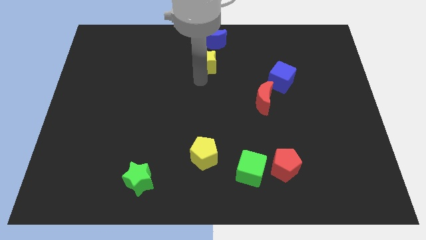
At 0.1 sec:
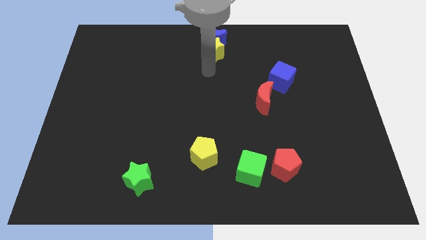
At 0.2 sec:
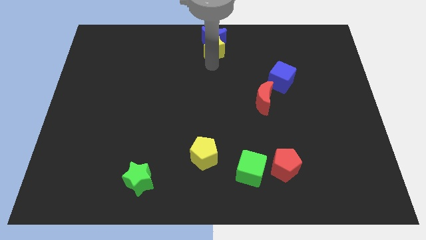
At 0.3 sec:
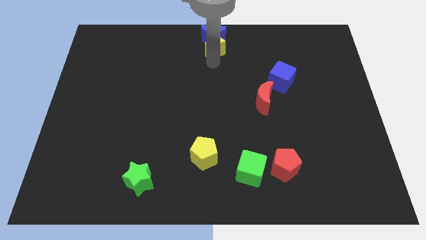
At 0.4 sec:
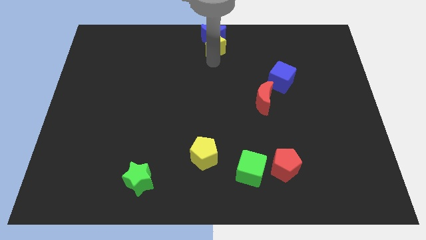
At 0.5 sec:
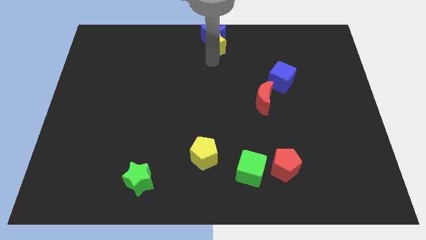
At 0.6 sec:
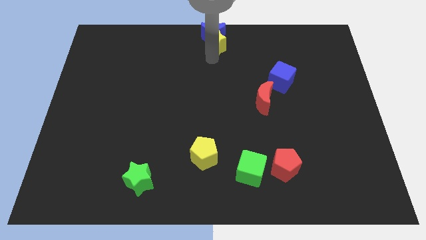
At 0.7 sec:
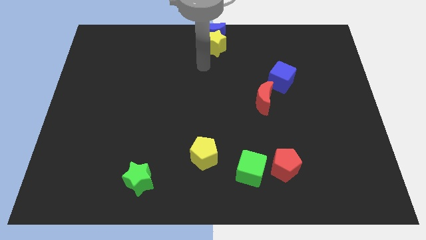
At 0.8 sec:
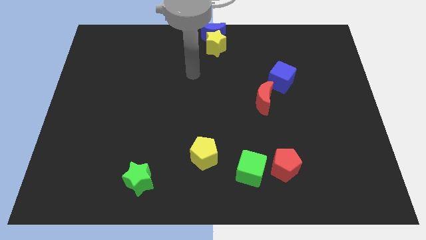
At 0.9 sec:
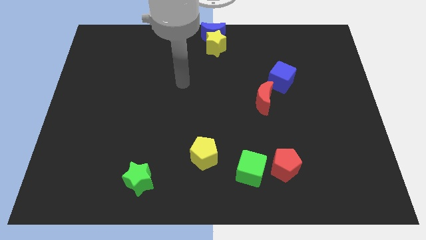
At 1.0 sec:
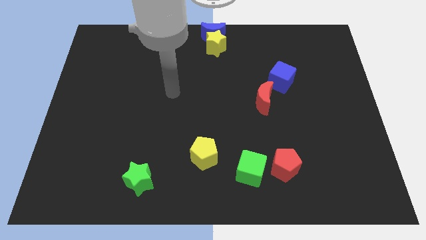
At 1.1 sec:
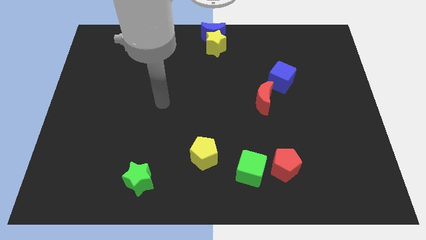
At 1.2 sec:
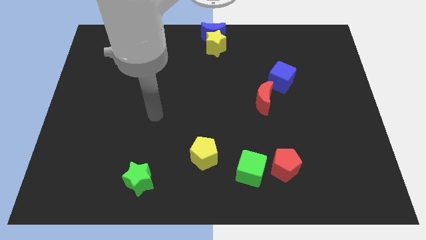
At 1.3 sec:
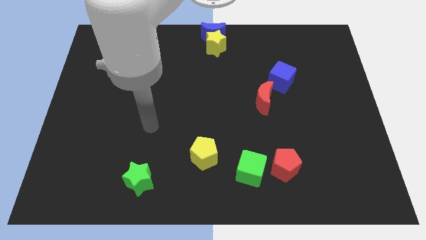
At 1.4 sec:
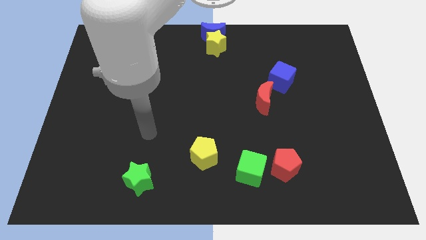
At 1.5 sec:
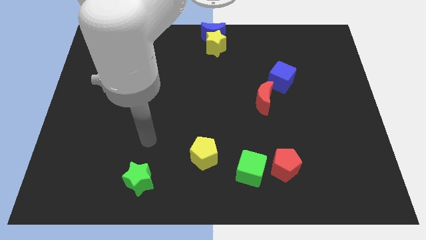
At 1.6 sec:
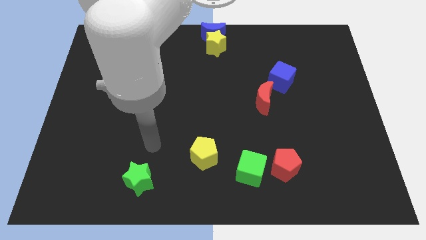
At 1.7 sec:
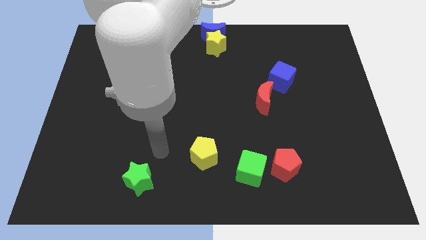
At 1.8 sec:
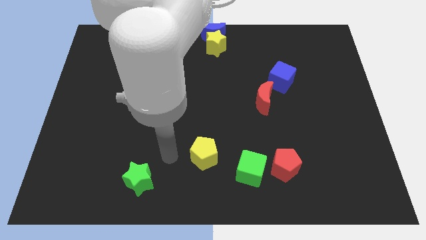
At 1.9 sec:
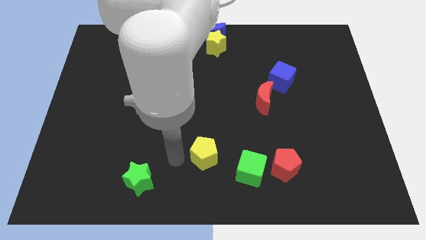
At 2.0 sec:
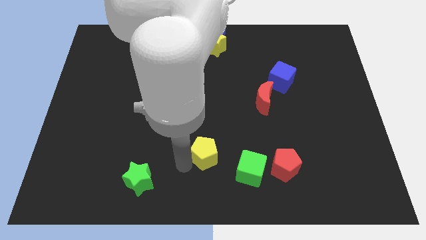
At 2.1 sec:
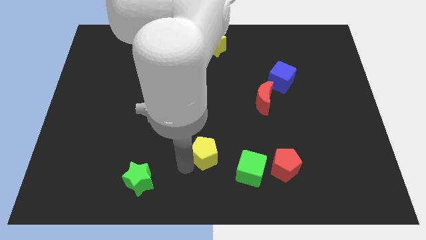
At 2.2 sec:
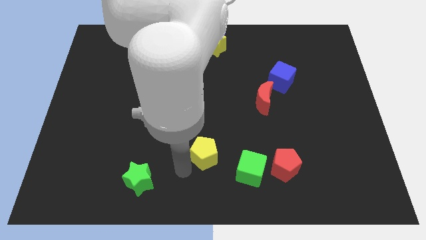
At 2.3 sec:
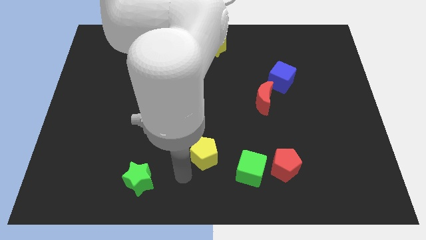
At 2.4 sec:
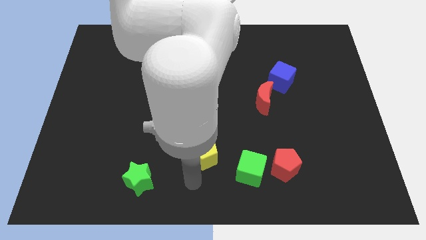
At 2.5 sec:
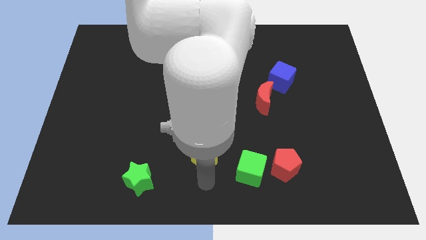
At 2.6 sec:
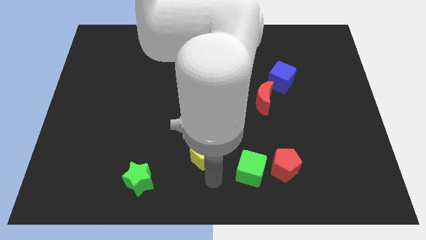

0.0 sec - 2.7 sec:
place the arm down to the yellow pentagon

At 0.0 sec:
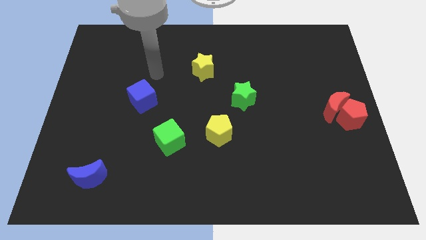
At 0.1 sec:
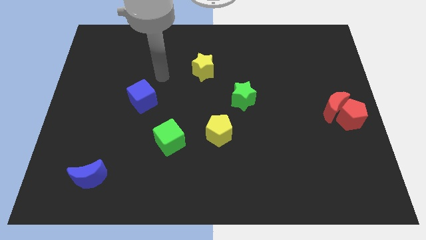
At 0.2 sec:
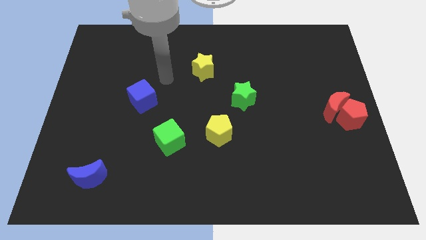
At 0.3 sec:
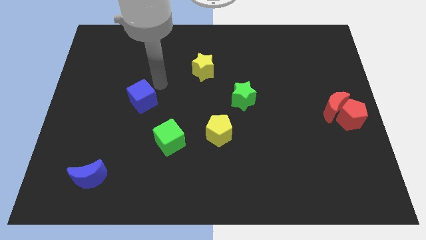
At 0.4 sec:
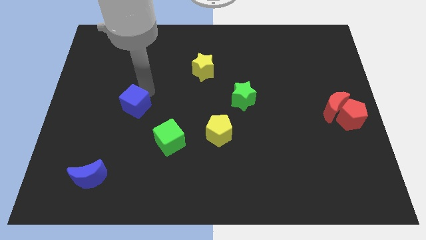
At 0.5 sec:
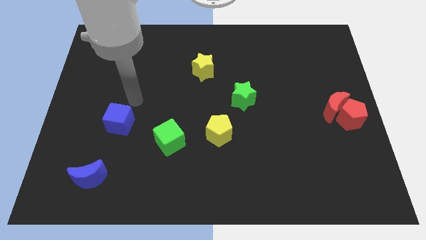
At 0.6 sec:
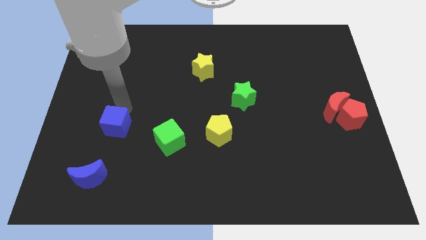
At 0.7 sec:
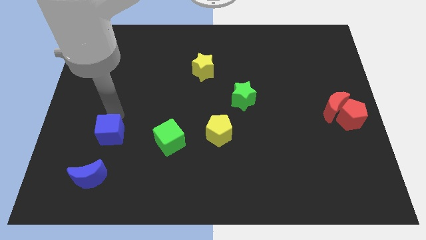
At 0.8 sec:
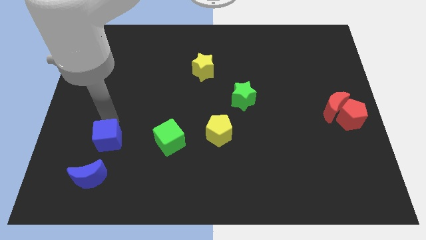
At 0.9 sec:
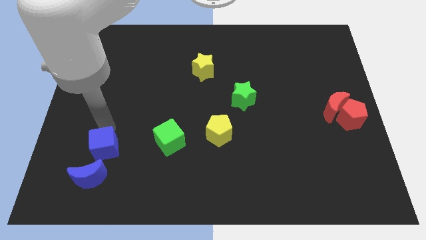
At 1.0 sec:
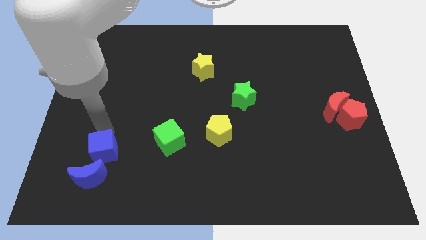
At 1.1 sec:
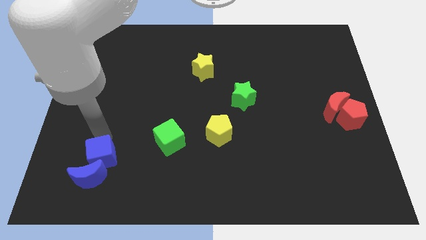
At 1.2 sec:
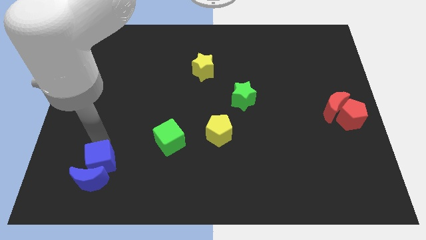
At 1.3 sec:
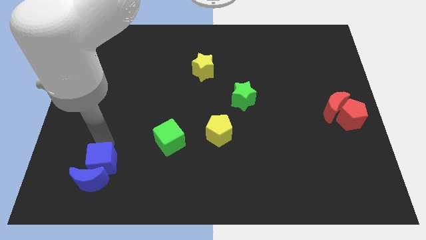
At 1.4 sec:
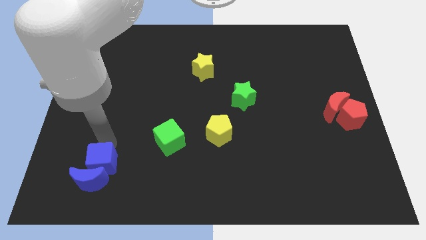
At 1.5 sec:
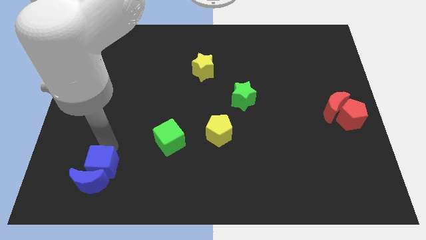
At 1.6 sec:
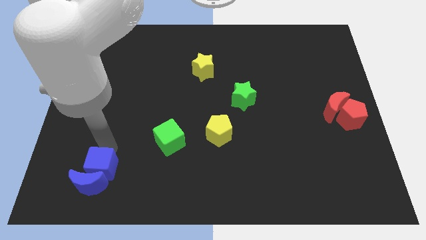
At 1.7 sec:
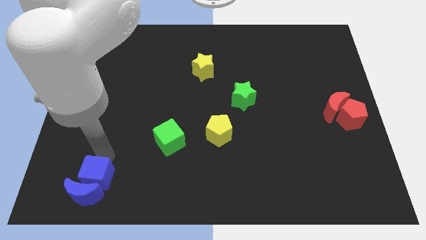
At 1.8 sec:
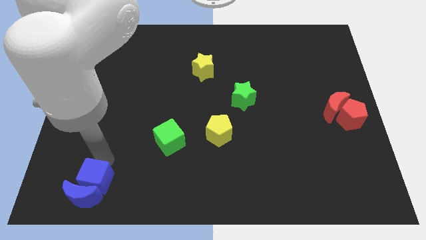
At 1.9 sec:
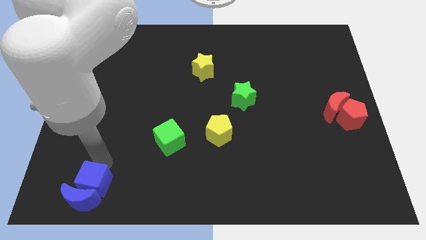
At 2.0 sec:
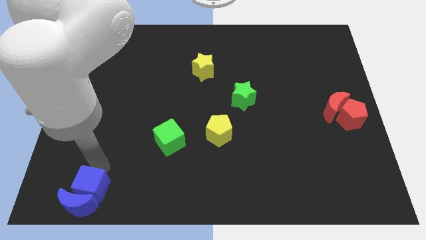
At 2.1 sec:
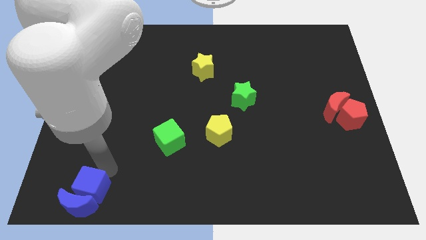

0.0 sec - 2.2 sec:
push the blue moon into blue cube

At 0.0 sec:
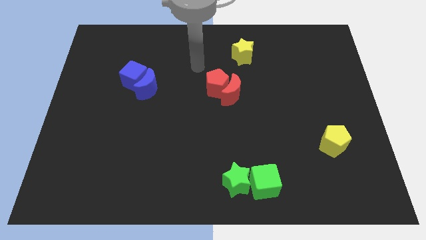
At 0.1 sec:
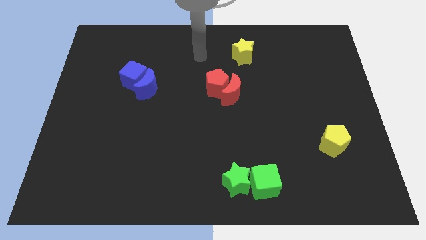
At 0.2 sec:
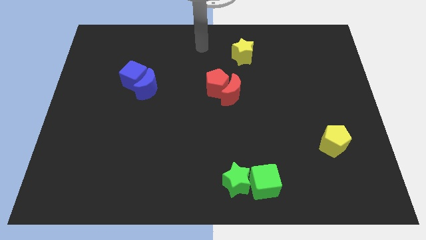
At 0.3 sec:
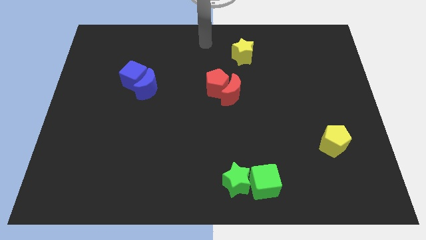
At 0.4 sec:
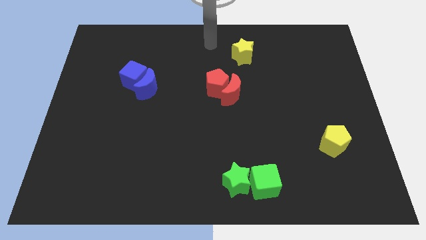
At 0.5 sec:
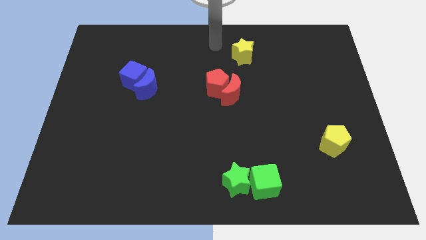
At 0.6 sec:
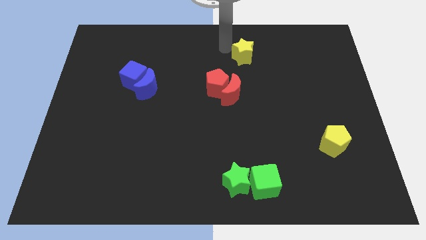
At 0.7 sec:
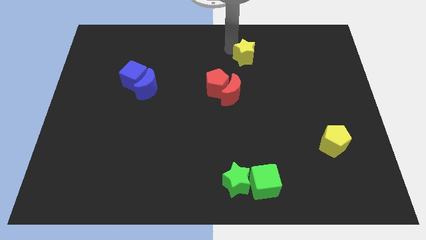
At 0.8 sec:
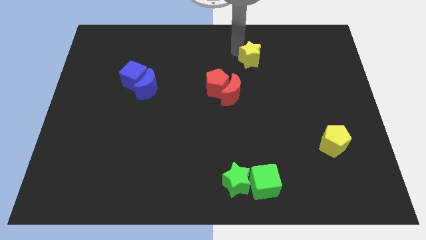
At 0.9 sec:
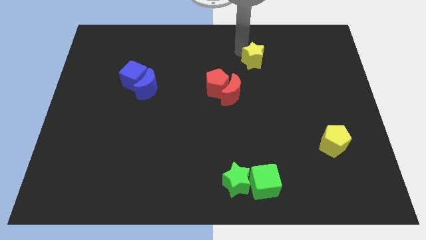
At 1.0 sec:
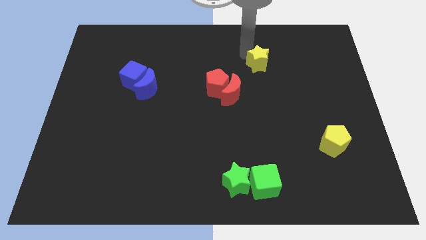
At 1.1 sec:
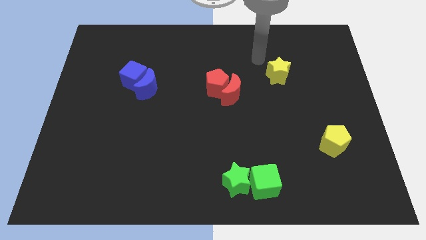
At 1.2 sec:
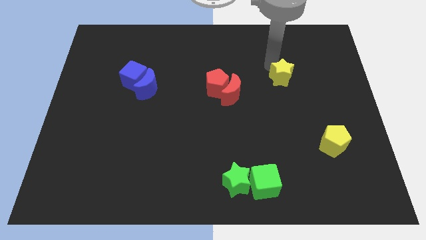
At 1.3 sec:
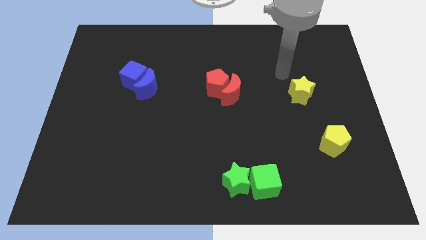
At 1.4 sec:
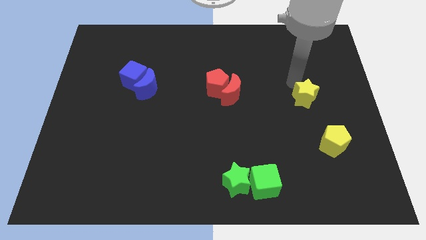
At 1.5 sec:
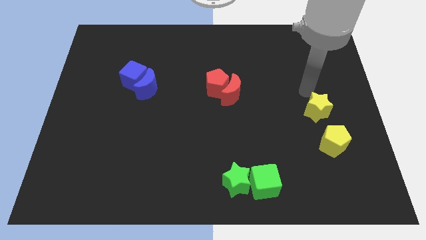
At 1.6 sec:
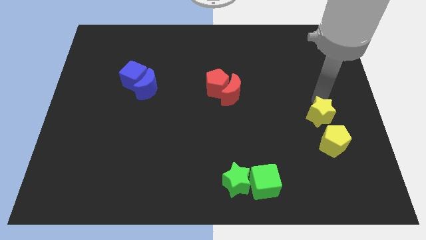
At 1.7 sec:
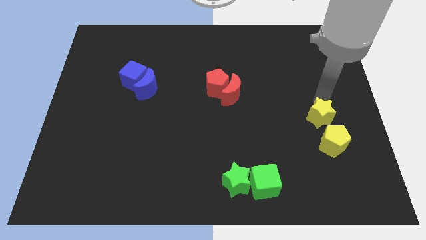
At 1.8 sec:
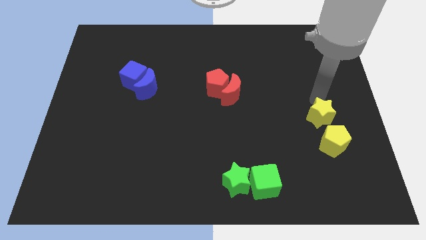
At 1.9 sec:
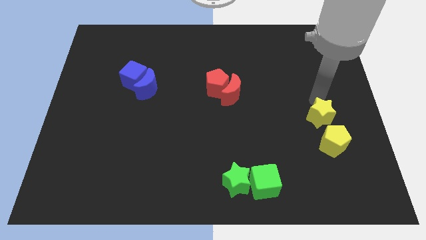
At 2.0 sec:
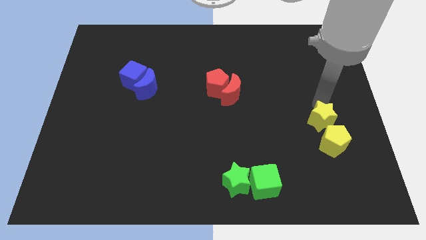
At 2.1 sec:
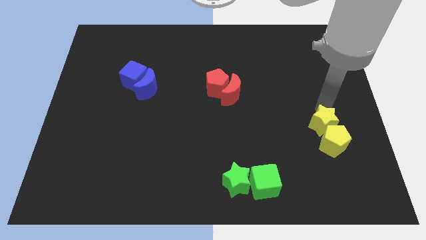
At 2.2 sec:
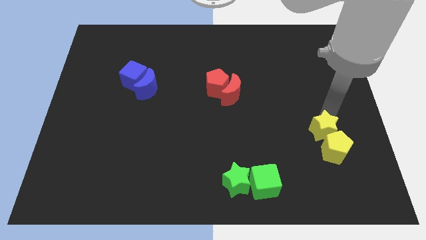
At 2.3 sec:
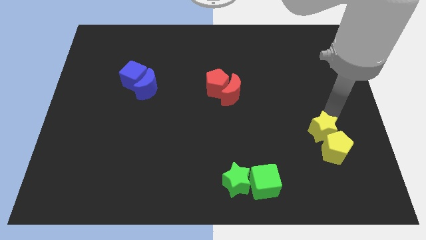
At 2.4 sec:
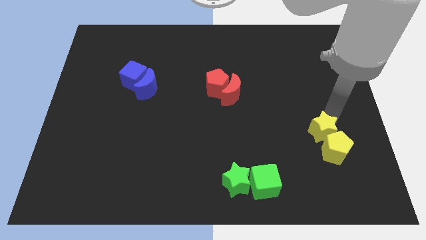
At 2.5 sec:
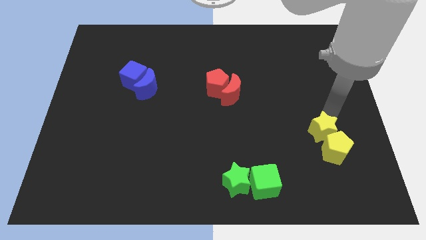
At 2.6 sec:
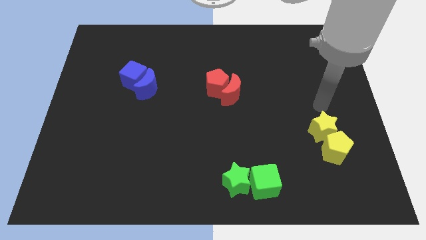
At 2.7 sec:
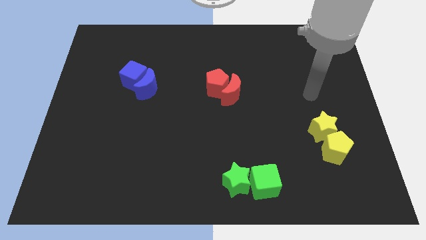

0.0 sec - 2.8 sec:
push the yellow star into the yellow pentagon

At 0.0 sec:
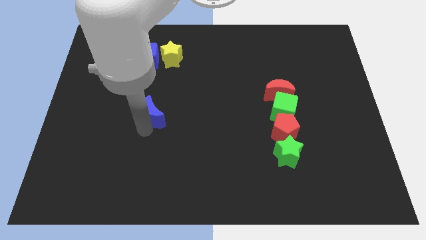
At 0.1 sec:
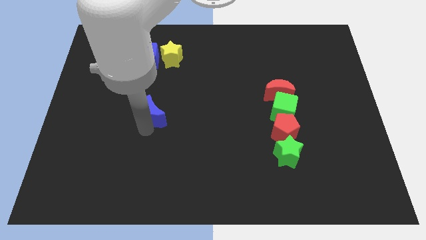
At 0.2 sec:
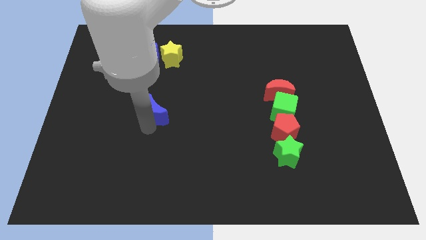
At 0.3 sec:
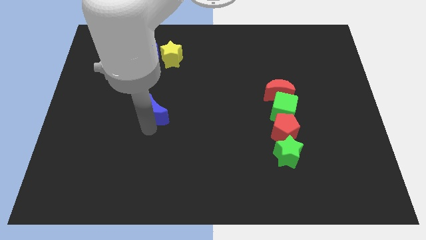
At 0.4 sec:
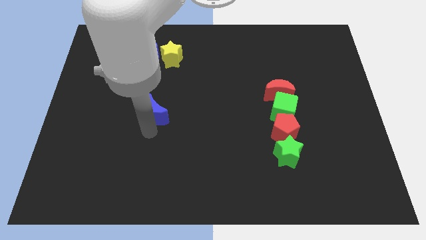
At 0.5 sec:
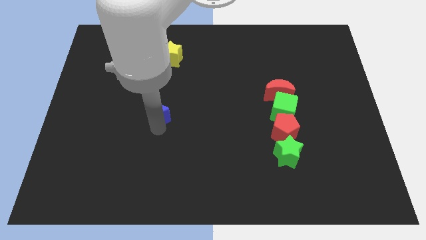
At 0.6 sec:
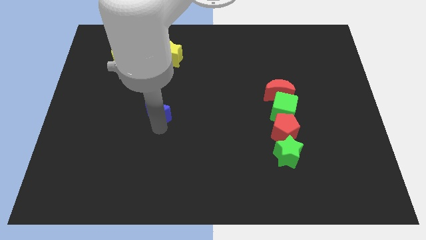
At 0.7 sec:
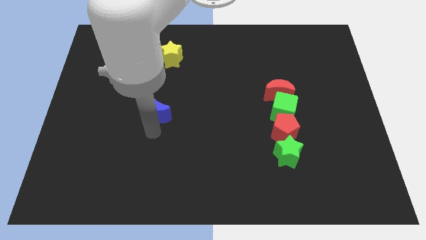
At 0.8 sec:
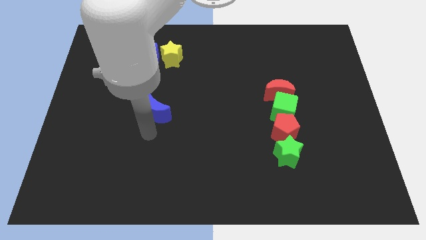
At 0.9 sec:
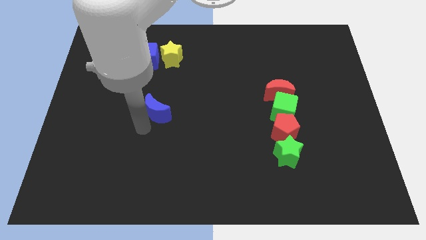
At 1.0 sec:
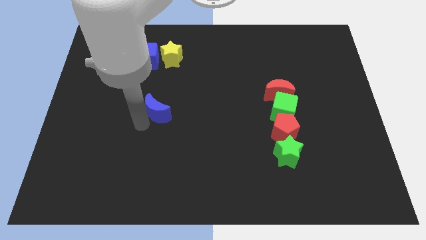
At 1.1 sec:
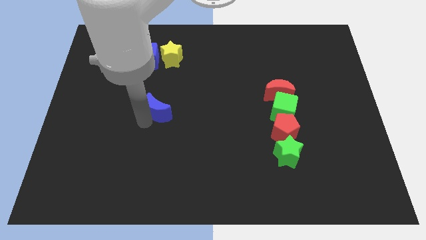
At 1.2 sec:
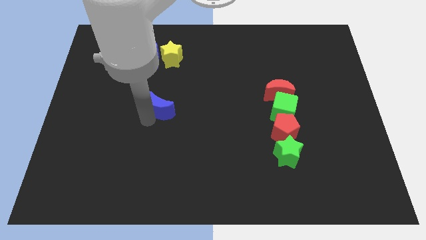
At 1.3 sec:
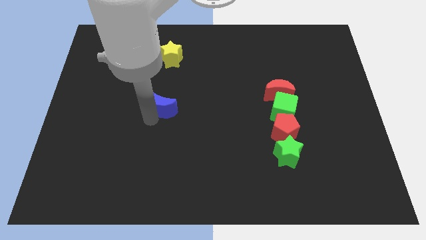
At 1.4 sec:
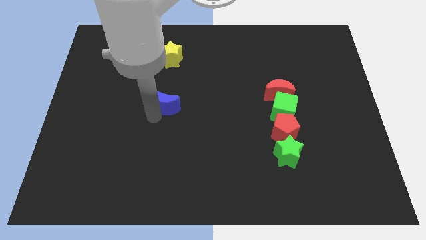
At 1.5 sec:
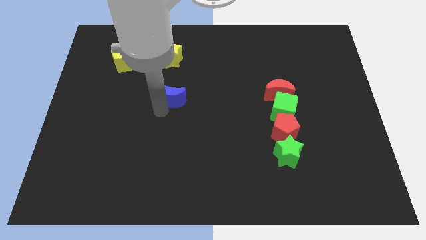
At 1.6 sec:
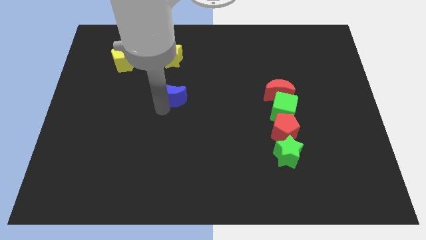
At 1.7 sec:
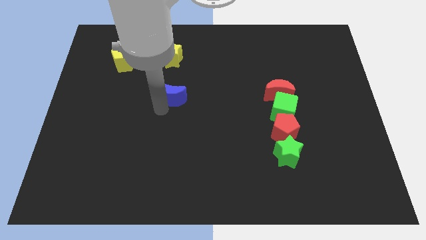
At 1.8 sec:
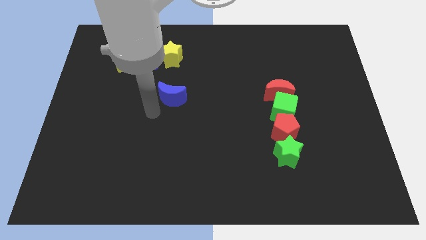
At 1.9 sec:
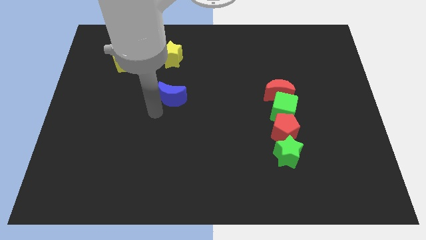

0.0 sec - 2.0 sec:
place the blue crescent vertically towards yellow star
